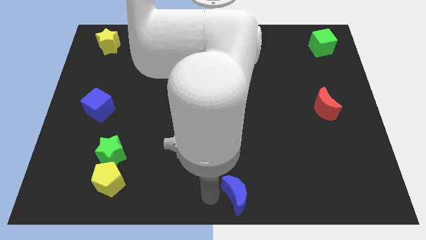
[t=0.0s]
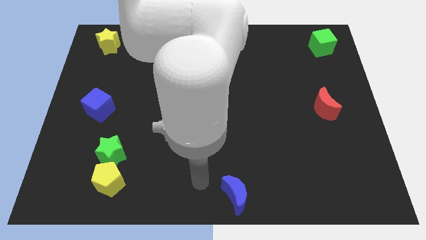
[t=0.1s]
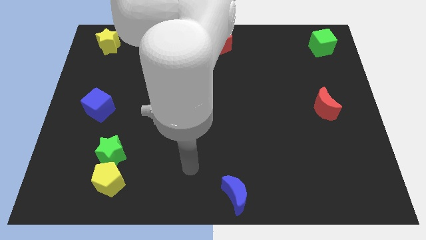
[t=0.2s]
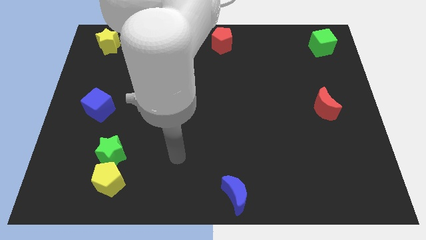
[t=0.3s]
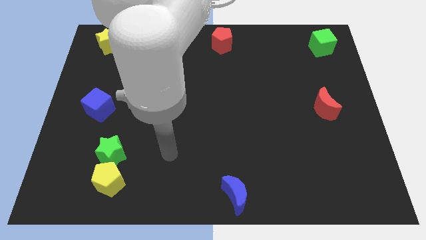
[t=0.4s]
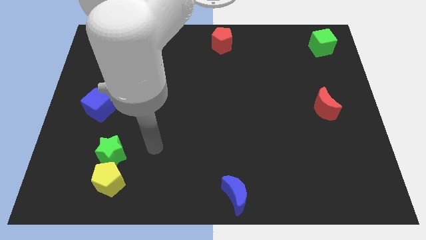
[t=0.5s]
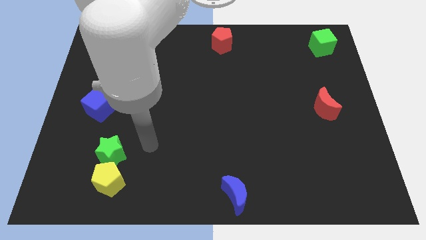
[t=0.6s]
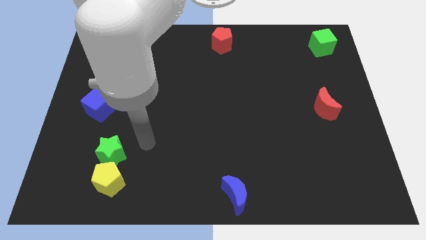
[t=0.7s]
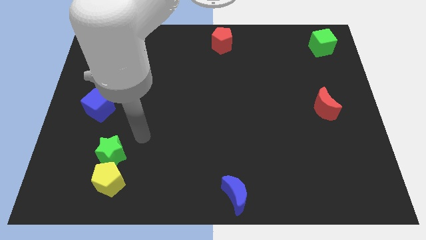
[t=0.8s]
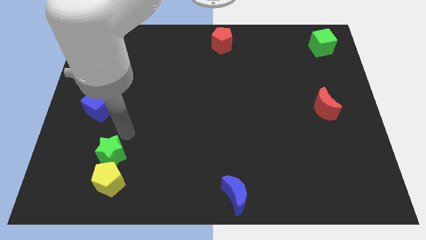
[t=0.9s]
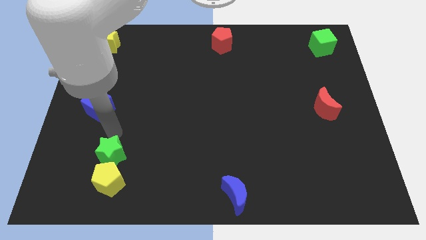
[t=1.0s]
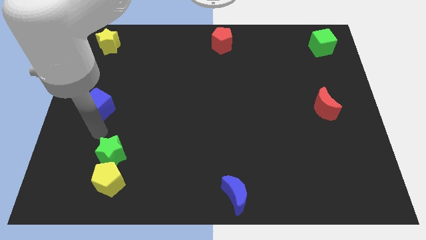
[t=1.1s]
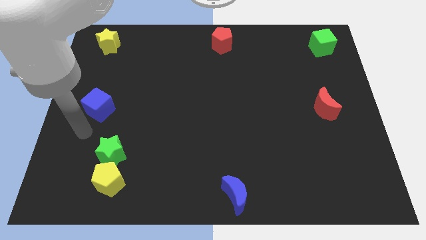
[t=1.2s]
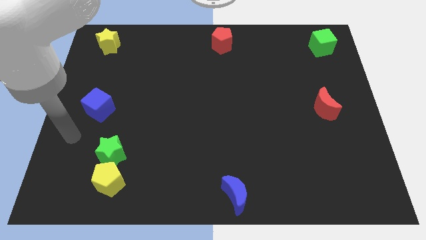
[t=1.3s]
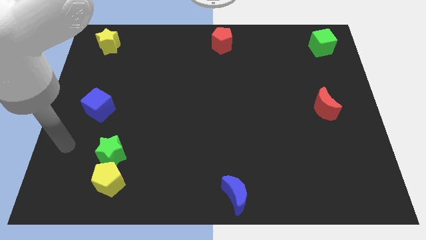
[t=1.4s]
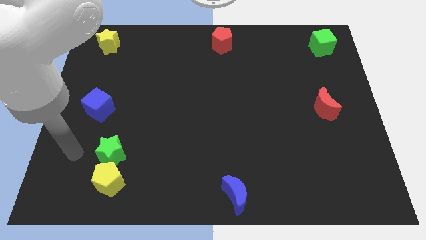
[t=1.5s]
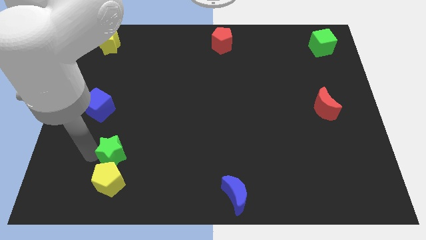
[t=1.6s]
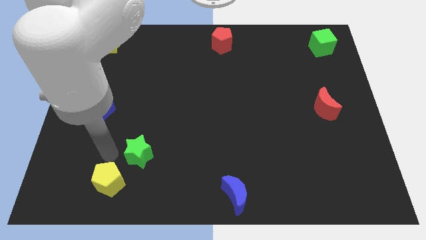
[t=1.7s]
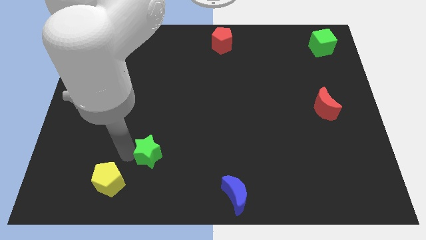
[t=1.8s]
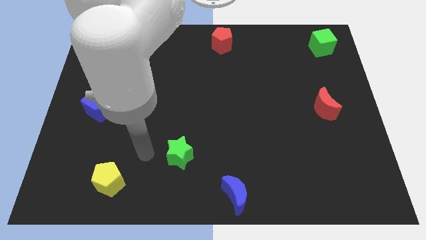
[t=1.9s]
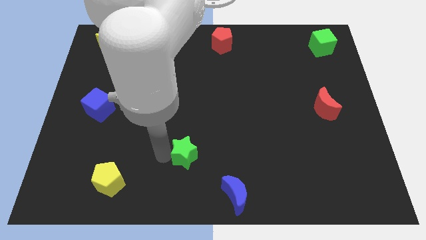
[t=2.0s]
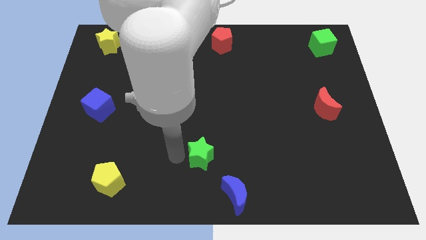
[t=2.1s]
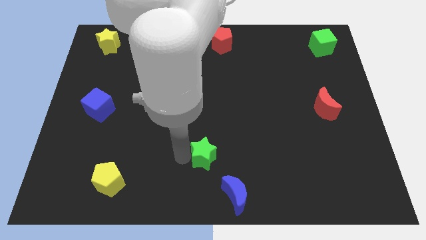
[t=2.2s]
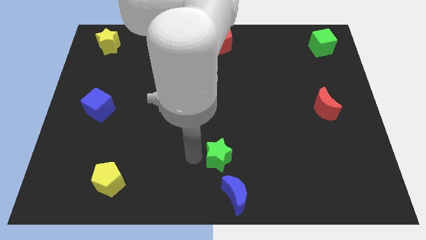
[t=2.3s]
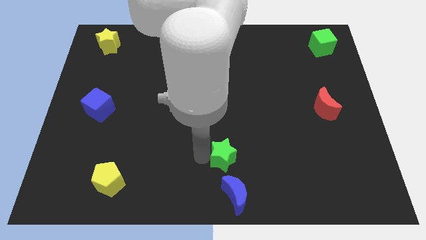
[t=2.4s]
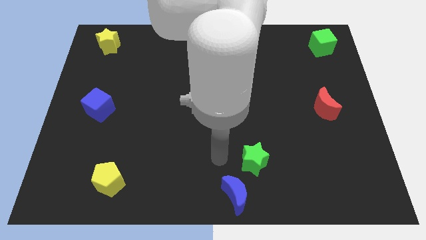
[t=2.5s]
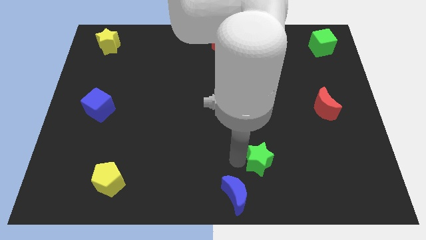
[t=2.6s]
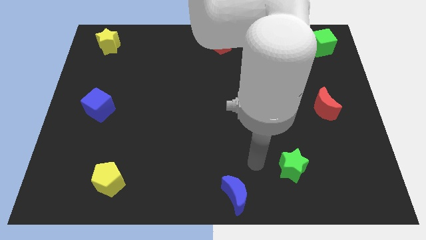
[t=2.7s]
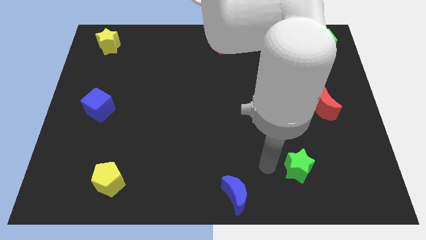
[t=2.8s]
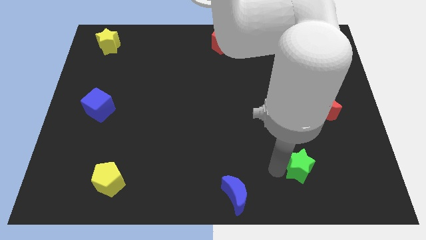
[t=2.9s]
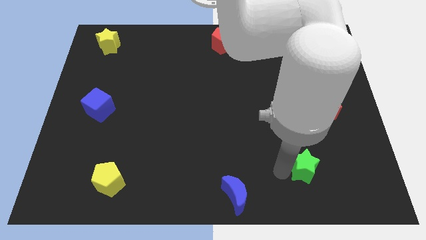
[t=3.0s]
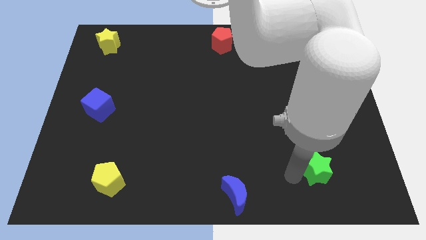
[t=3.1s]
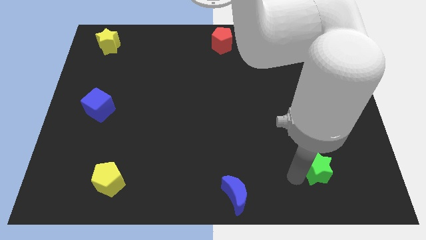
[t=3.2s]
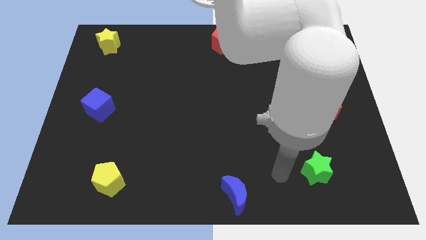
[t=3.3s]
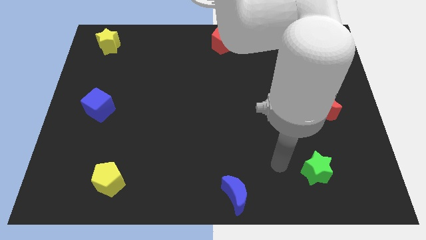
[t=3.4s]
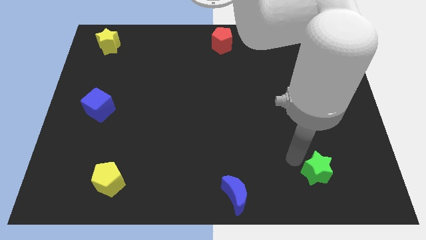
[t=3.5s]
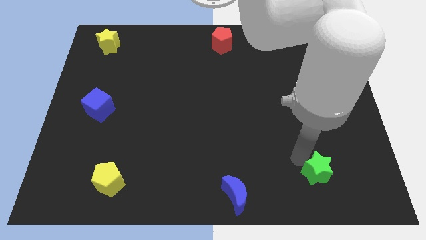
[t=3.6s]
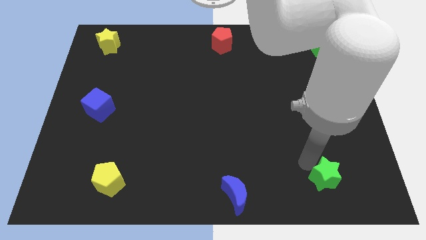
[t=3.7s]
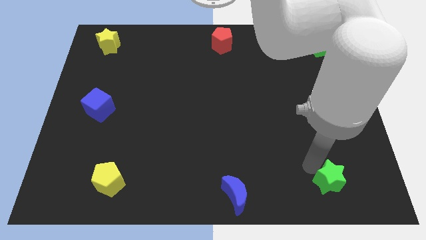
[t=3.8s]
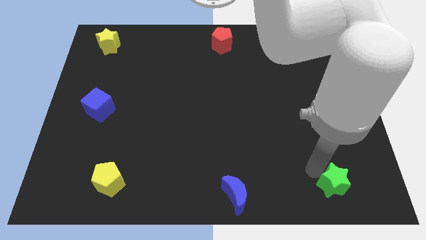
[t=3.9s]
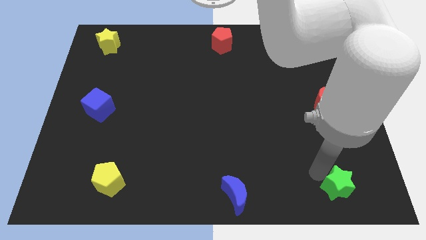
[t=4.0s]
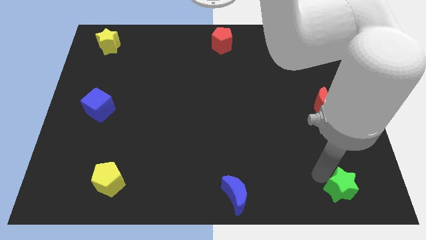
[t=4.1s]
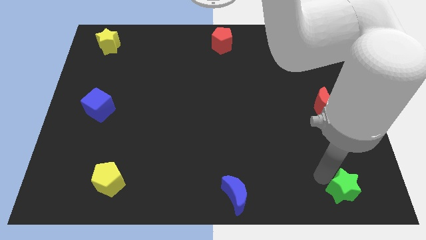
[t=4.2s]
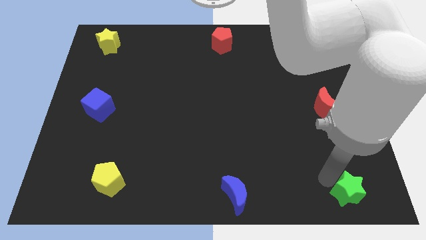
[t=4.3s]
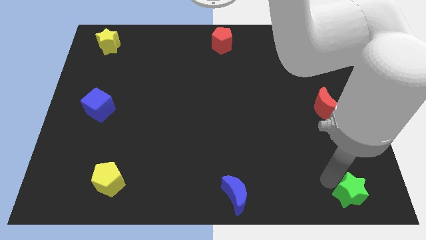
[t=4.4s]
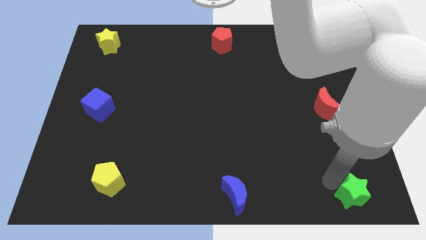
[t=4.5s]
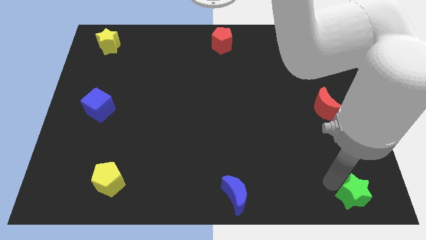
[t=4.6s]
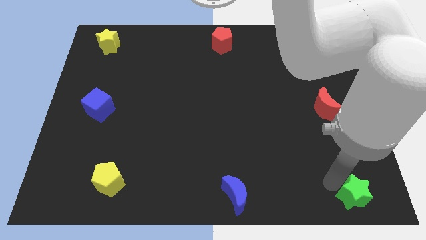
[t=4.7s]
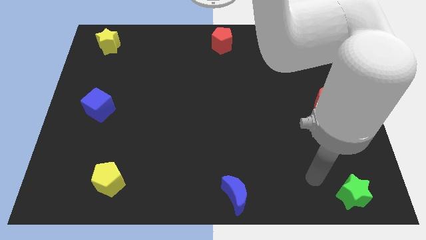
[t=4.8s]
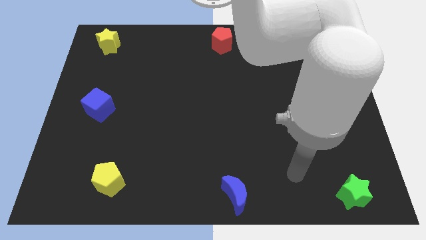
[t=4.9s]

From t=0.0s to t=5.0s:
move the green star towards the bottom right side of the board

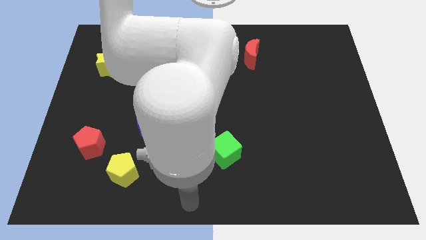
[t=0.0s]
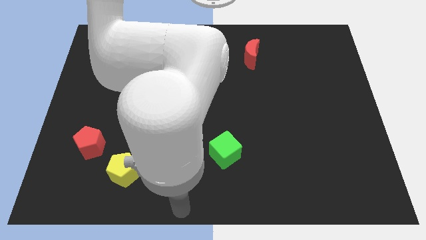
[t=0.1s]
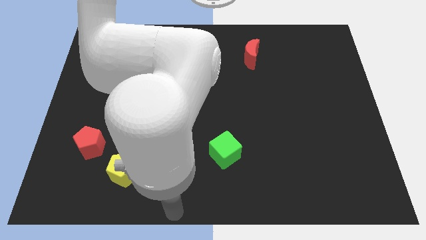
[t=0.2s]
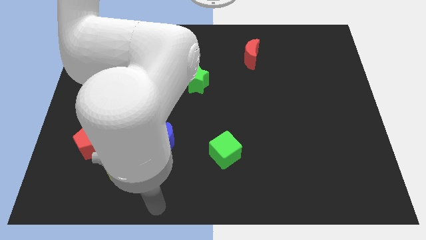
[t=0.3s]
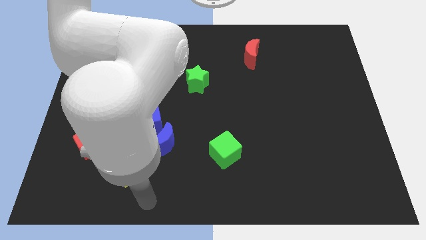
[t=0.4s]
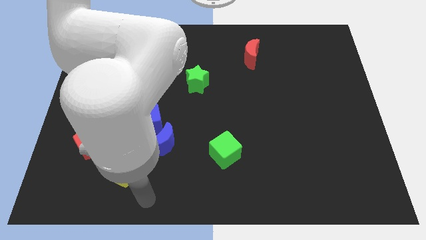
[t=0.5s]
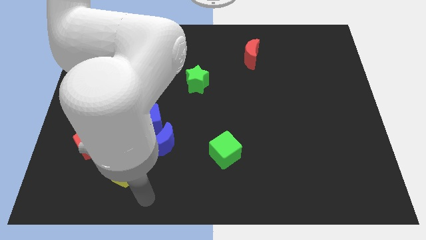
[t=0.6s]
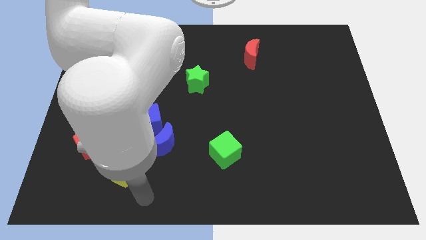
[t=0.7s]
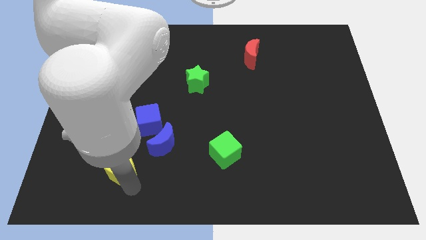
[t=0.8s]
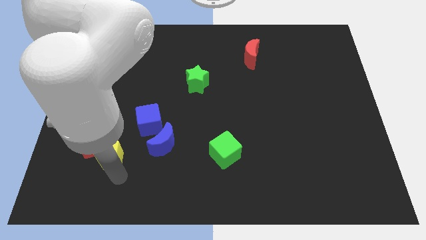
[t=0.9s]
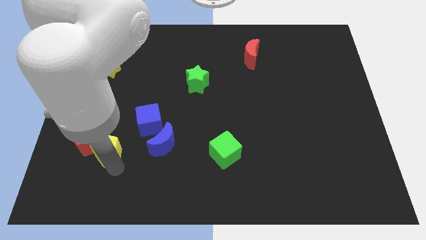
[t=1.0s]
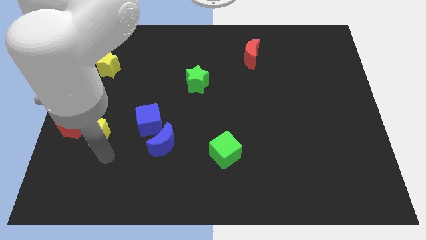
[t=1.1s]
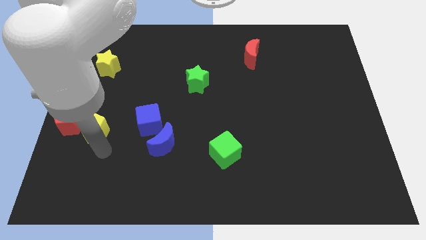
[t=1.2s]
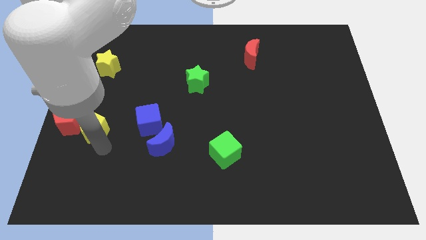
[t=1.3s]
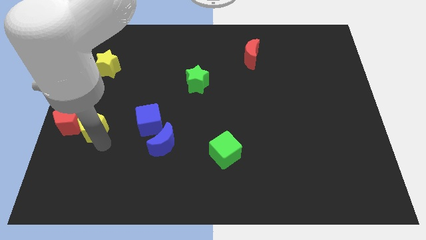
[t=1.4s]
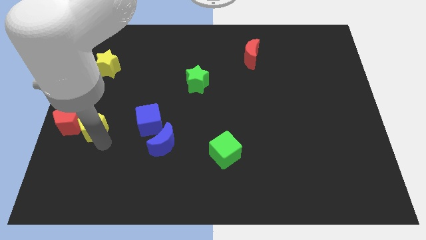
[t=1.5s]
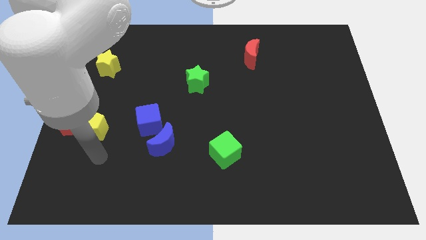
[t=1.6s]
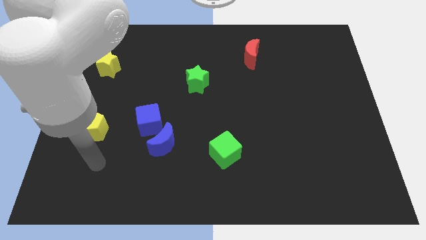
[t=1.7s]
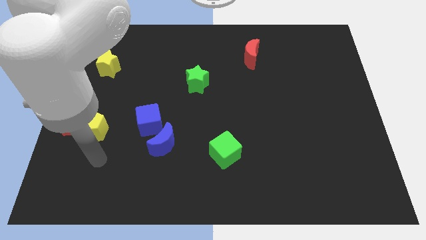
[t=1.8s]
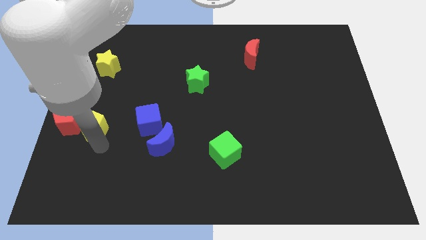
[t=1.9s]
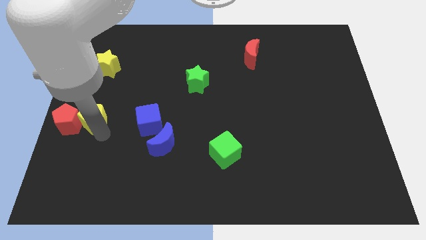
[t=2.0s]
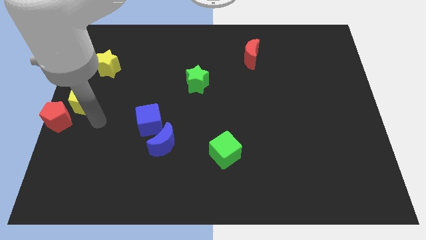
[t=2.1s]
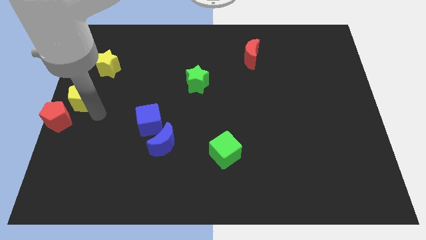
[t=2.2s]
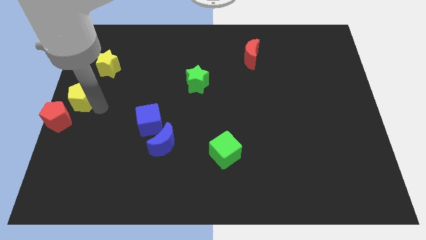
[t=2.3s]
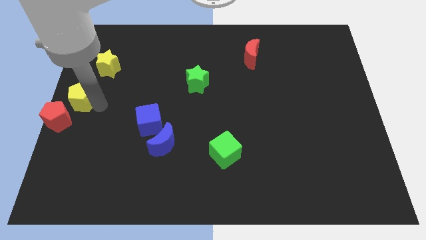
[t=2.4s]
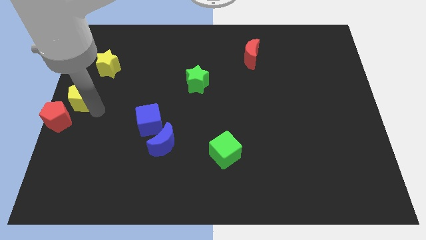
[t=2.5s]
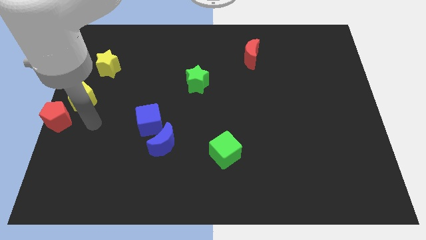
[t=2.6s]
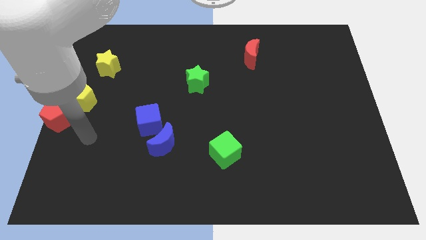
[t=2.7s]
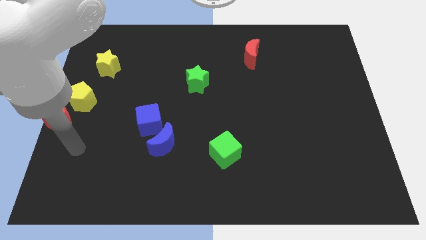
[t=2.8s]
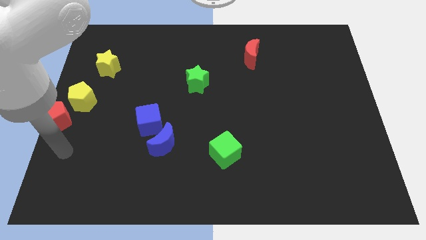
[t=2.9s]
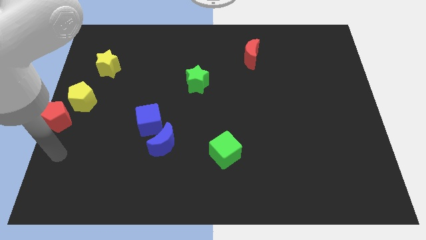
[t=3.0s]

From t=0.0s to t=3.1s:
move yellow and red pentagons to the center left

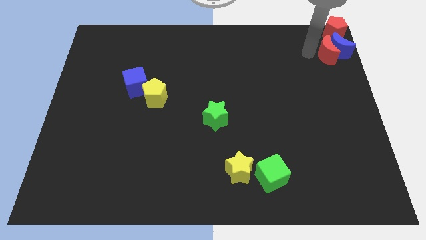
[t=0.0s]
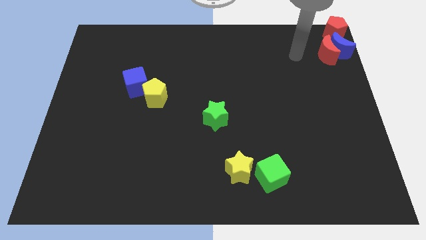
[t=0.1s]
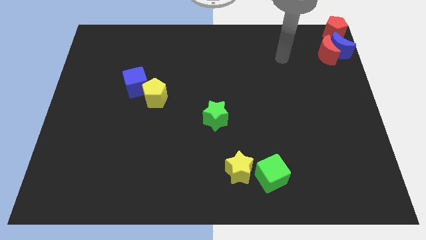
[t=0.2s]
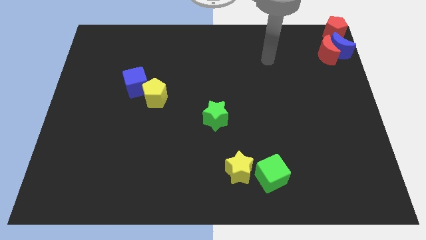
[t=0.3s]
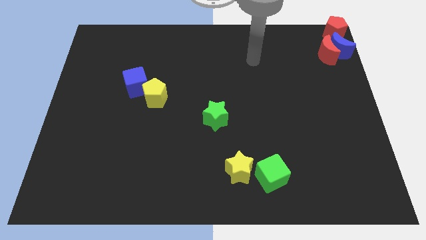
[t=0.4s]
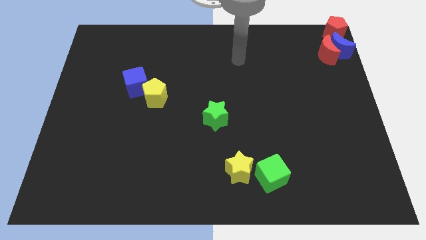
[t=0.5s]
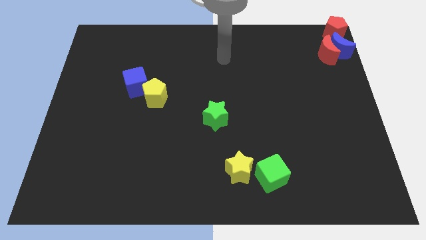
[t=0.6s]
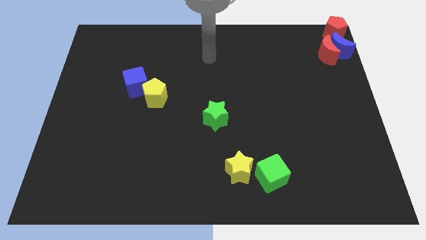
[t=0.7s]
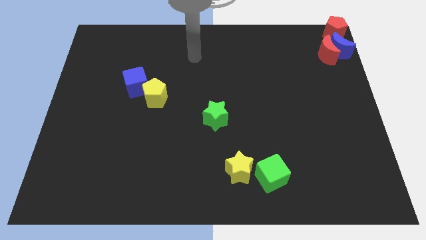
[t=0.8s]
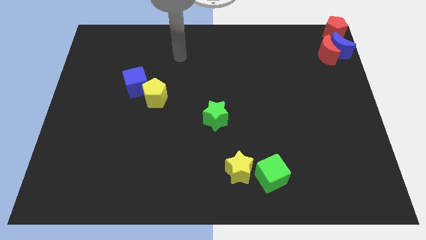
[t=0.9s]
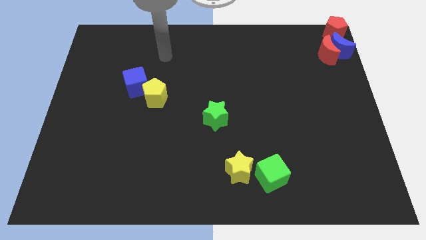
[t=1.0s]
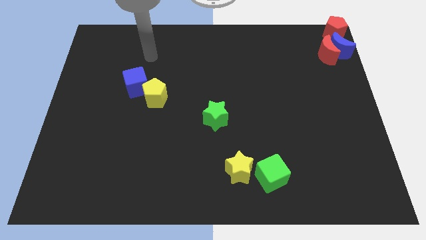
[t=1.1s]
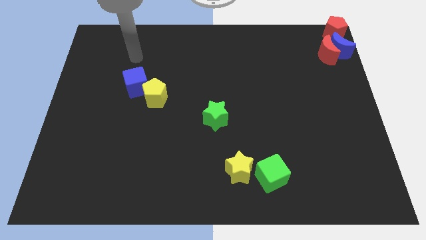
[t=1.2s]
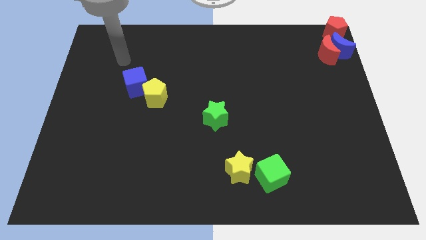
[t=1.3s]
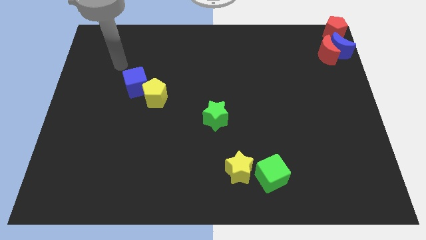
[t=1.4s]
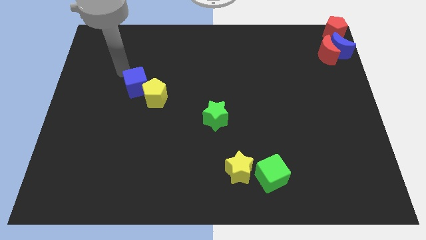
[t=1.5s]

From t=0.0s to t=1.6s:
move your arm towards the left side of the board
